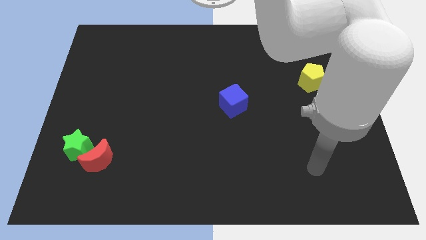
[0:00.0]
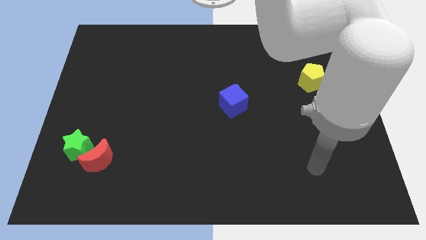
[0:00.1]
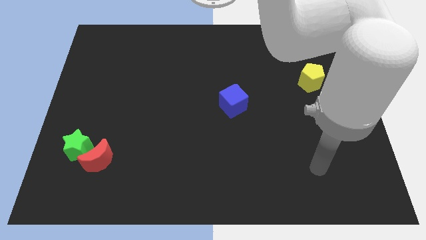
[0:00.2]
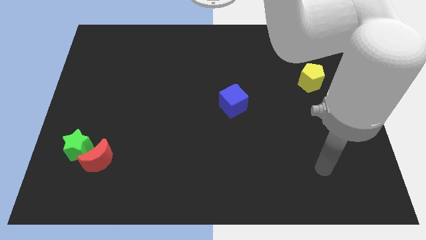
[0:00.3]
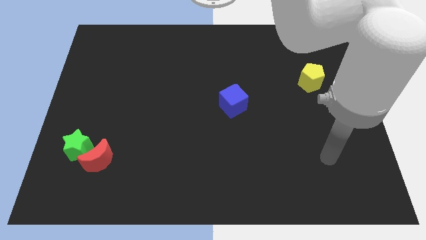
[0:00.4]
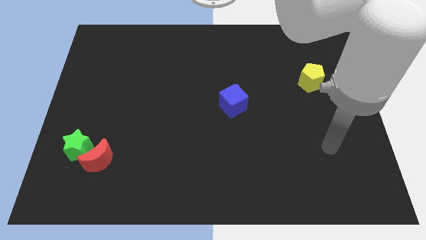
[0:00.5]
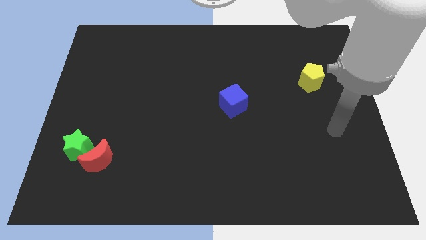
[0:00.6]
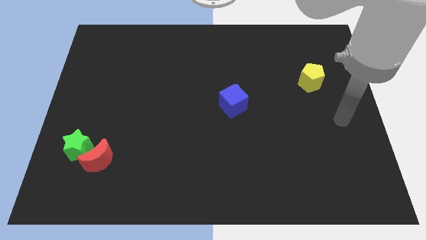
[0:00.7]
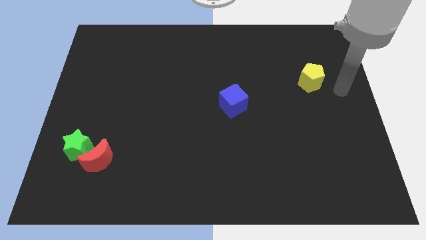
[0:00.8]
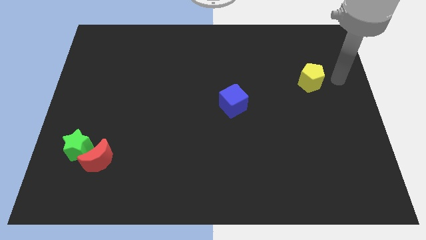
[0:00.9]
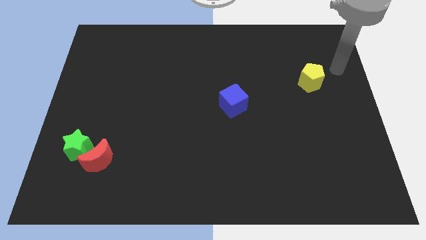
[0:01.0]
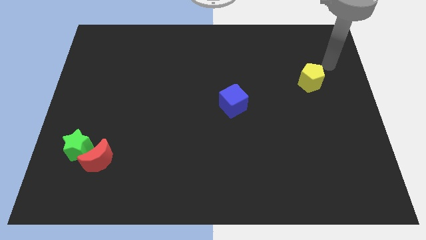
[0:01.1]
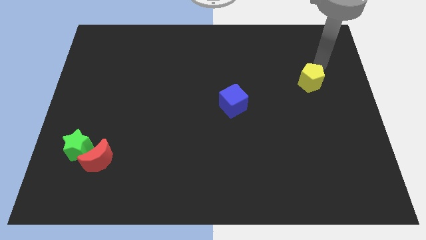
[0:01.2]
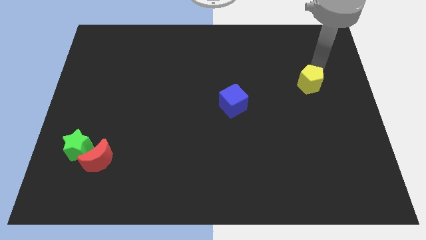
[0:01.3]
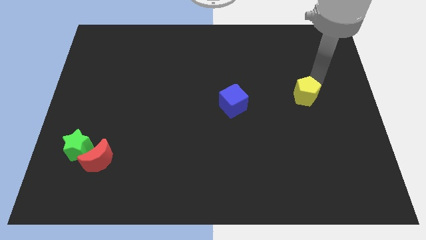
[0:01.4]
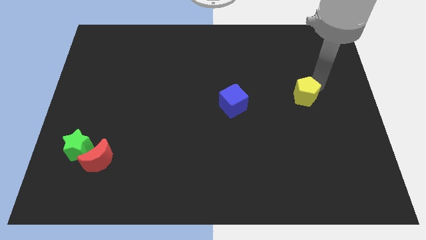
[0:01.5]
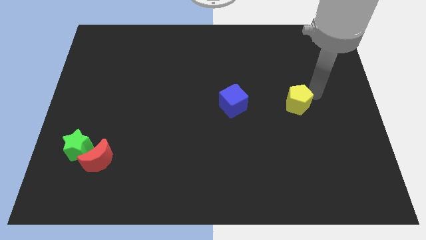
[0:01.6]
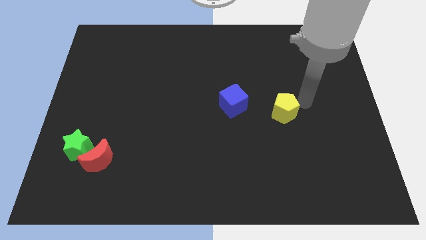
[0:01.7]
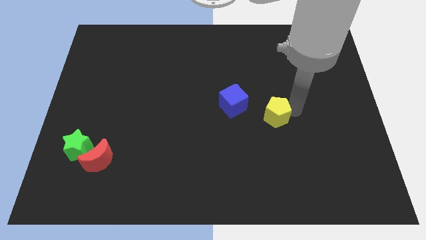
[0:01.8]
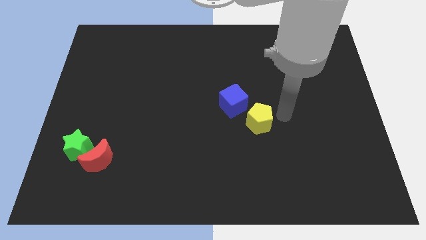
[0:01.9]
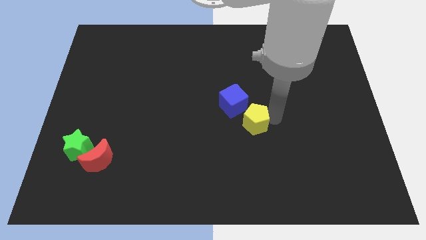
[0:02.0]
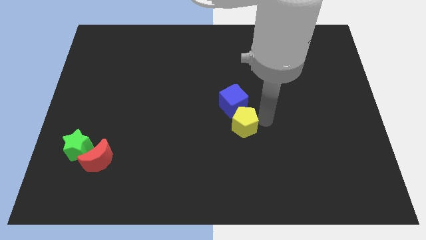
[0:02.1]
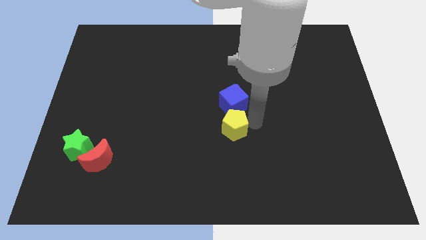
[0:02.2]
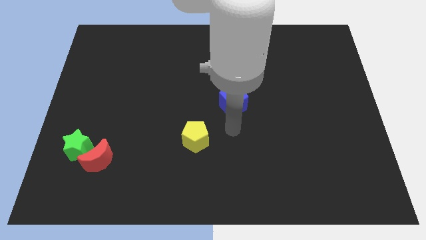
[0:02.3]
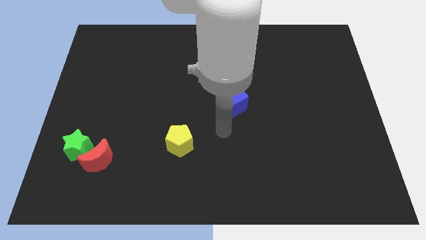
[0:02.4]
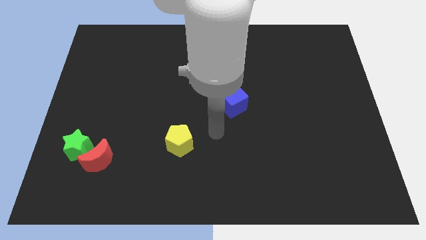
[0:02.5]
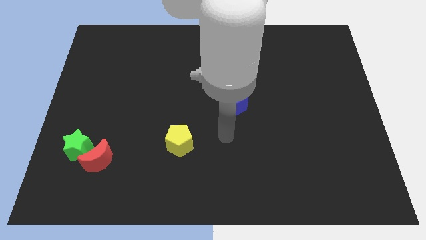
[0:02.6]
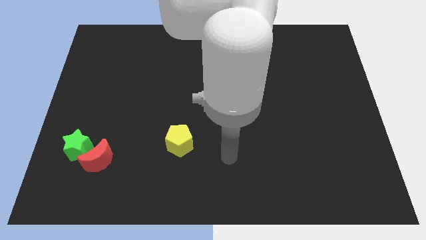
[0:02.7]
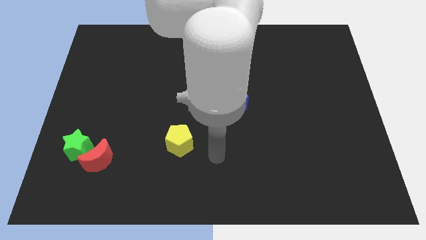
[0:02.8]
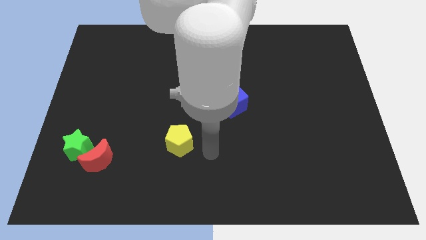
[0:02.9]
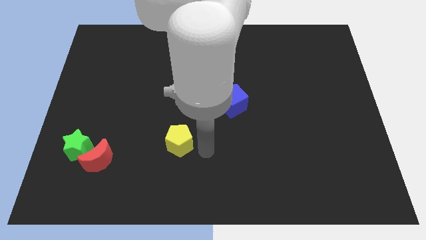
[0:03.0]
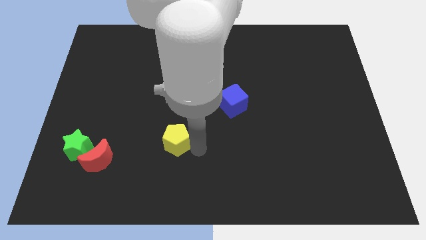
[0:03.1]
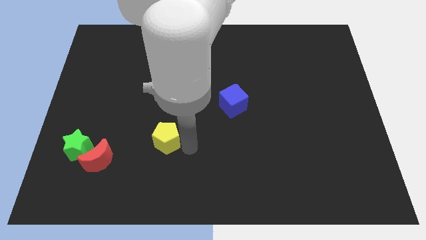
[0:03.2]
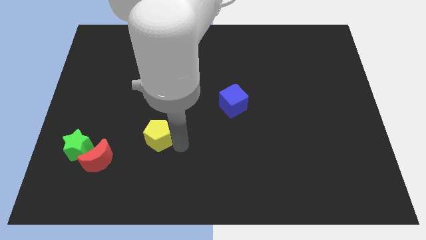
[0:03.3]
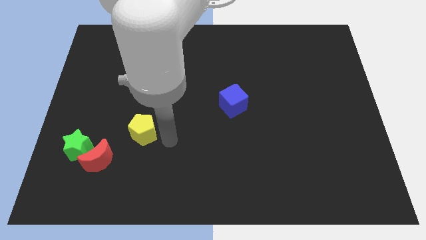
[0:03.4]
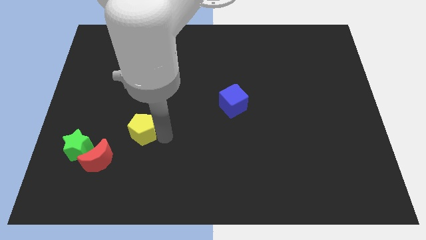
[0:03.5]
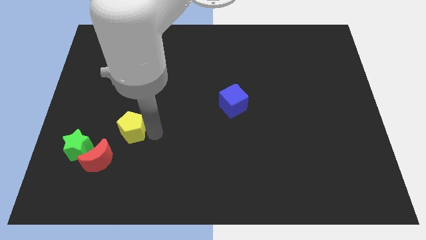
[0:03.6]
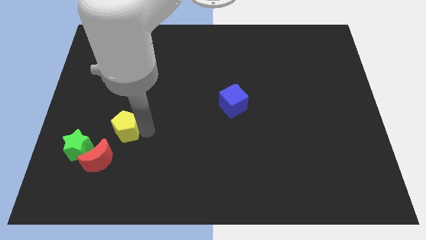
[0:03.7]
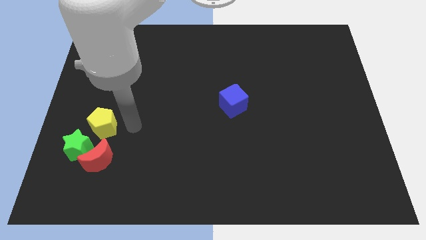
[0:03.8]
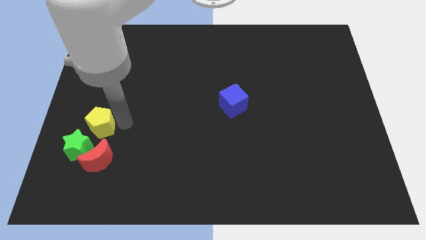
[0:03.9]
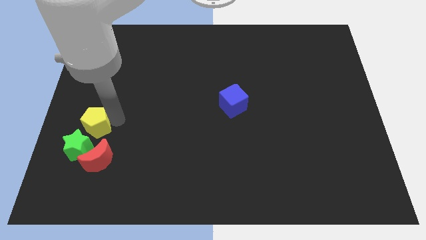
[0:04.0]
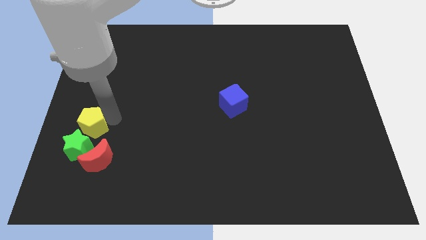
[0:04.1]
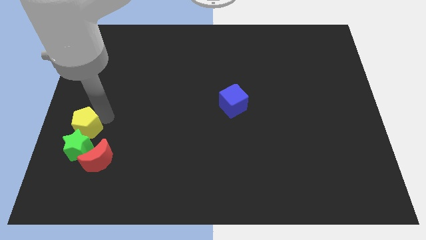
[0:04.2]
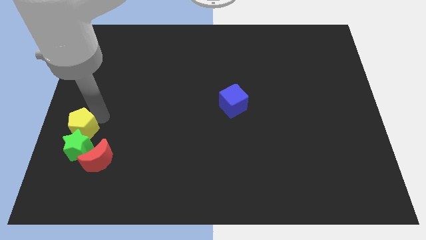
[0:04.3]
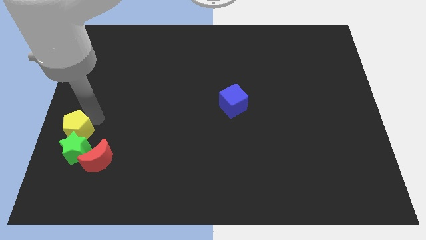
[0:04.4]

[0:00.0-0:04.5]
put the yellow block towards the star

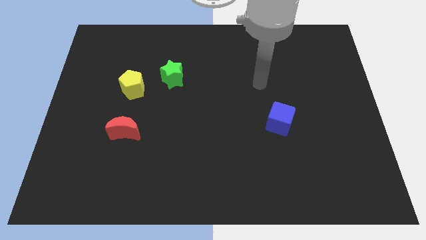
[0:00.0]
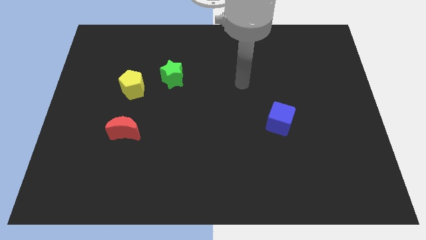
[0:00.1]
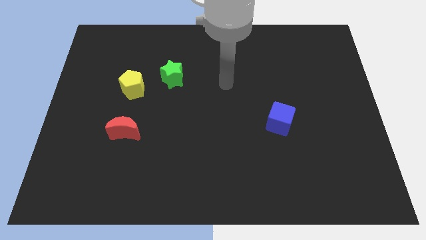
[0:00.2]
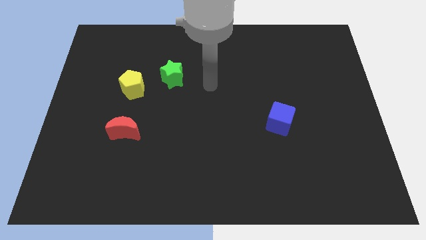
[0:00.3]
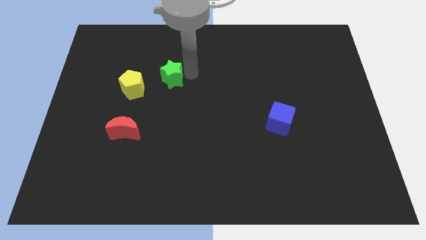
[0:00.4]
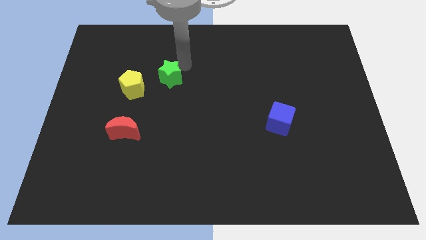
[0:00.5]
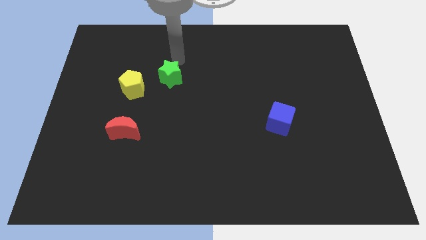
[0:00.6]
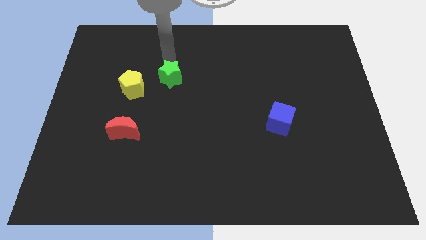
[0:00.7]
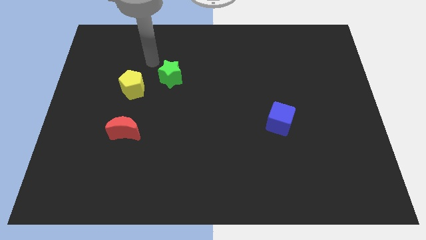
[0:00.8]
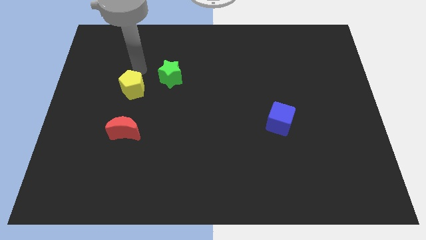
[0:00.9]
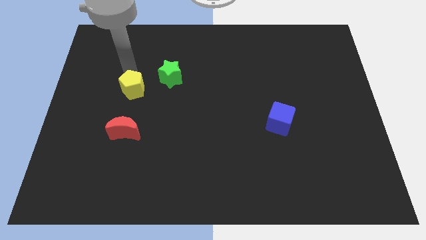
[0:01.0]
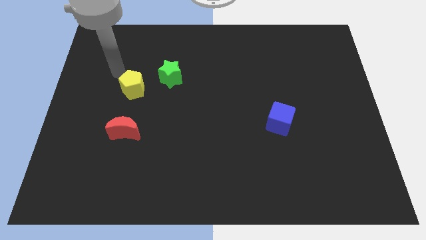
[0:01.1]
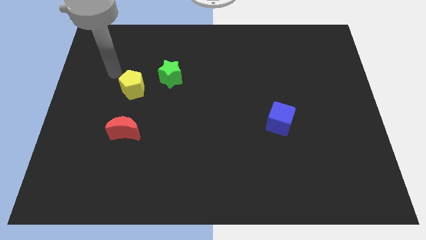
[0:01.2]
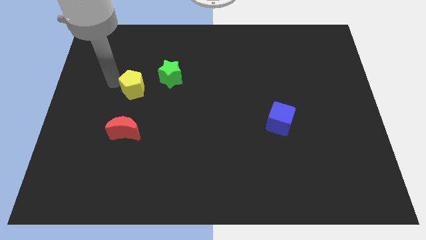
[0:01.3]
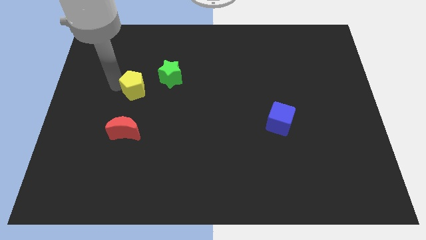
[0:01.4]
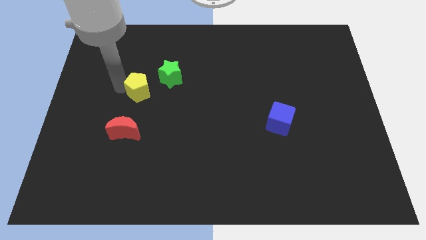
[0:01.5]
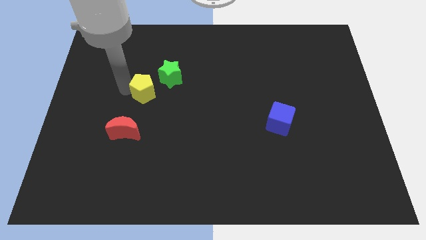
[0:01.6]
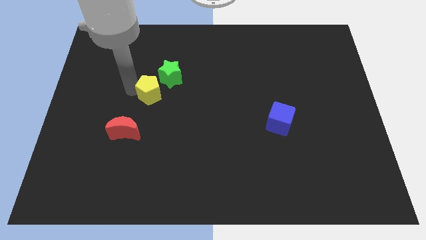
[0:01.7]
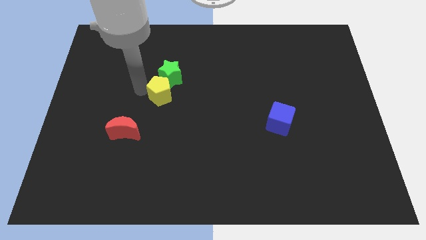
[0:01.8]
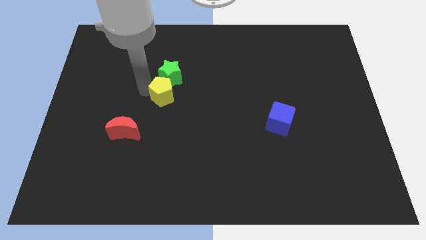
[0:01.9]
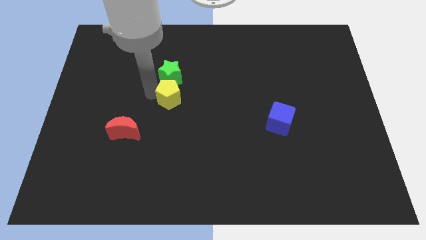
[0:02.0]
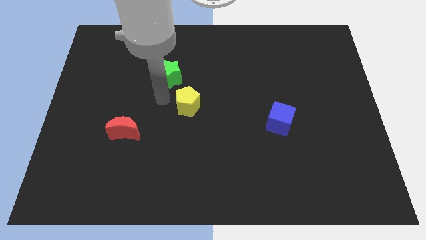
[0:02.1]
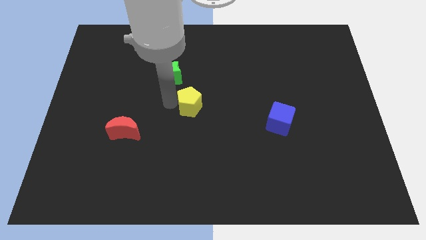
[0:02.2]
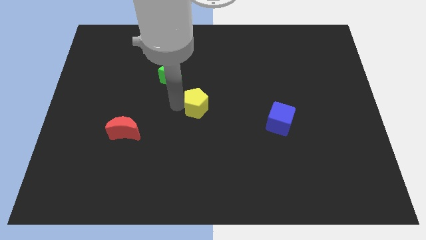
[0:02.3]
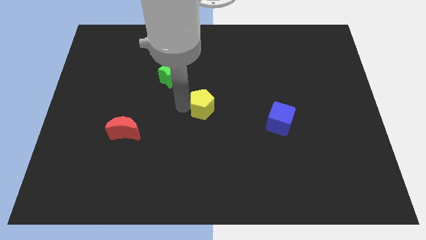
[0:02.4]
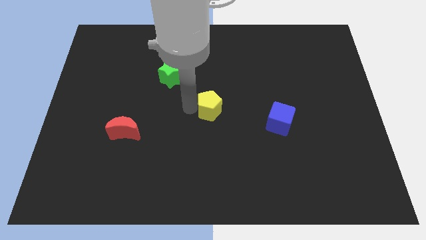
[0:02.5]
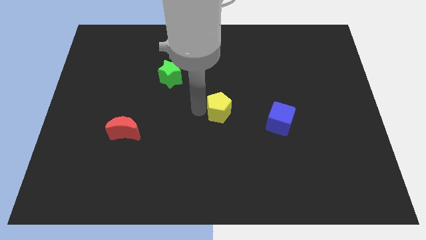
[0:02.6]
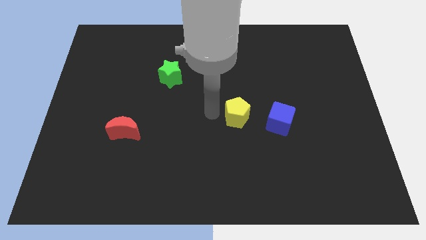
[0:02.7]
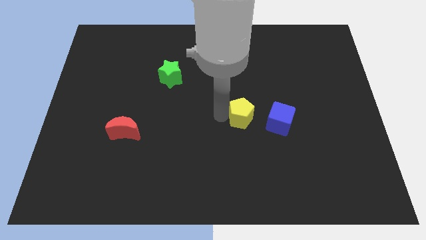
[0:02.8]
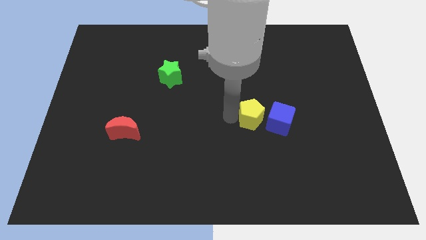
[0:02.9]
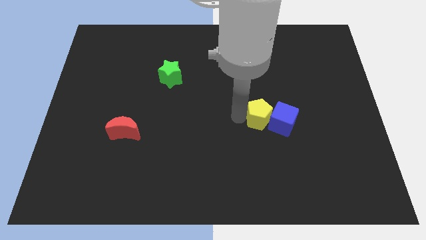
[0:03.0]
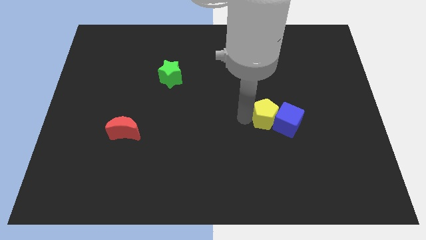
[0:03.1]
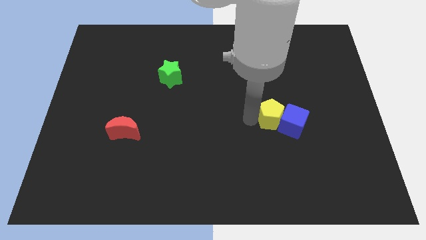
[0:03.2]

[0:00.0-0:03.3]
slide the pentagon to the cube

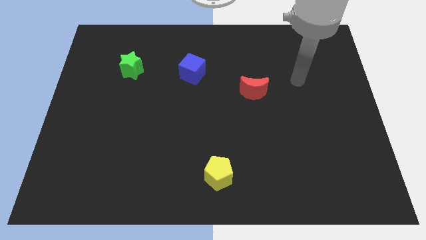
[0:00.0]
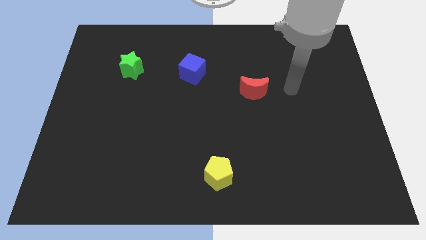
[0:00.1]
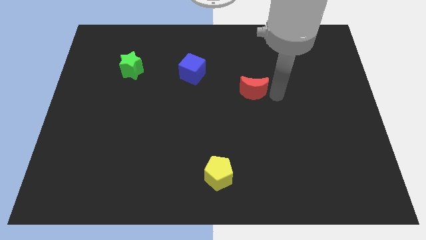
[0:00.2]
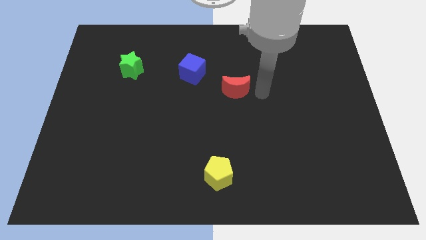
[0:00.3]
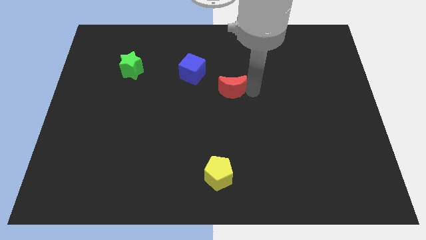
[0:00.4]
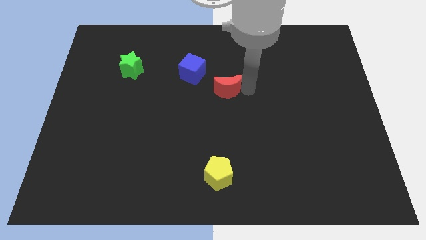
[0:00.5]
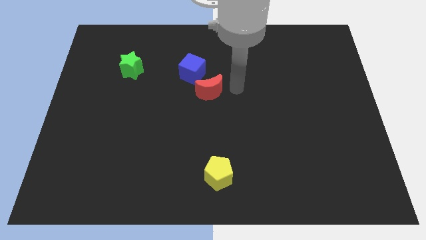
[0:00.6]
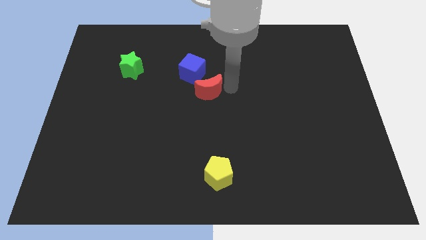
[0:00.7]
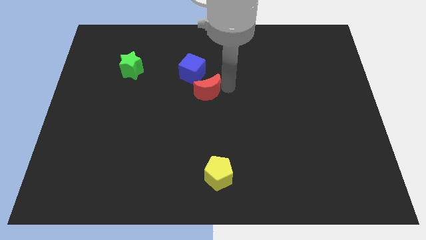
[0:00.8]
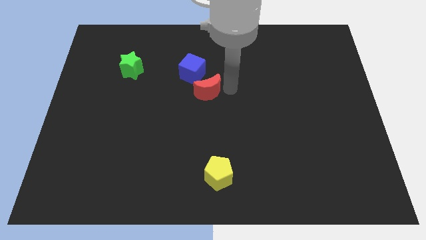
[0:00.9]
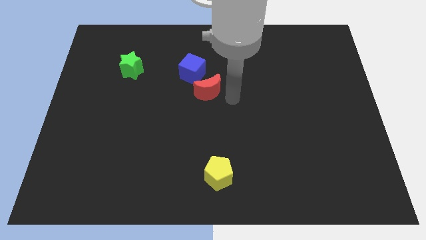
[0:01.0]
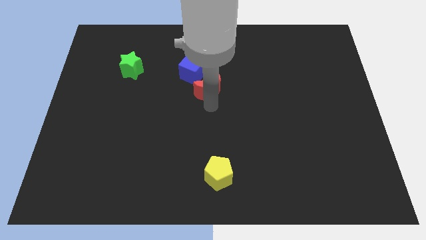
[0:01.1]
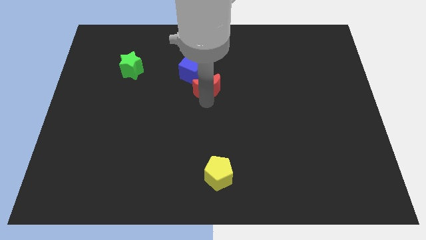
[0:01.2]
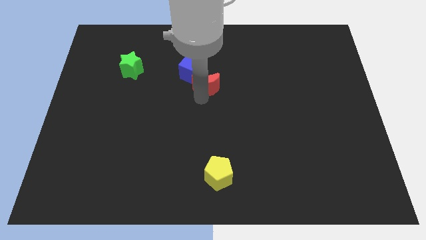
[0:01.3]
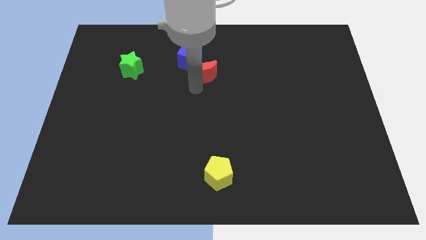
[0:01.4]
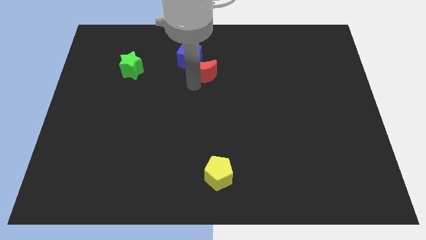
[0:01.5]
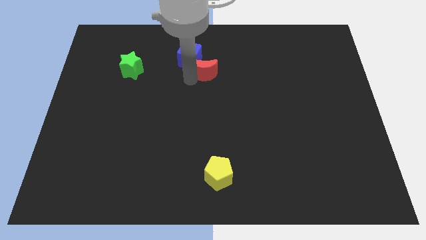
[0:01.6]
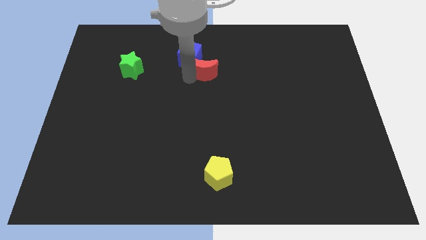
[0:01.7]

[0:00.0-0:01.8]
slide the red block to the blue block
